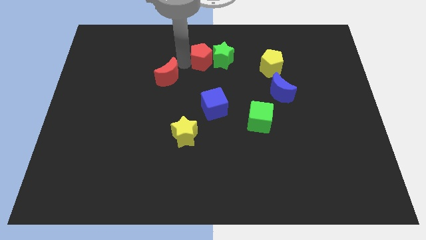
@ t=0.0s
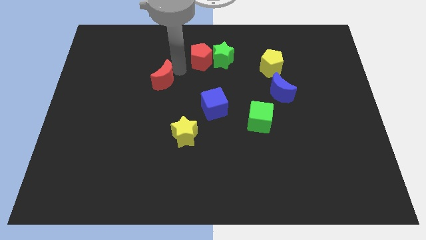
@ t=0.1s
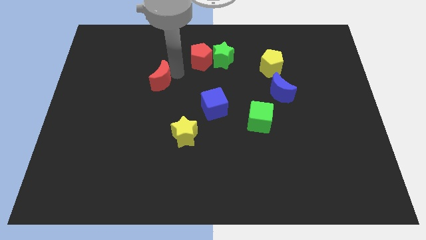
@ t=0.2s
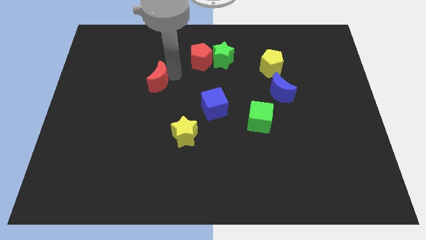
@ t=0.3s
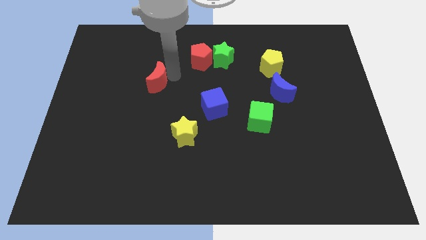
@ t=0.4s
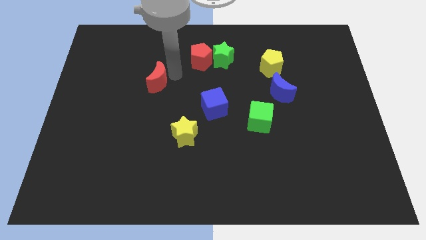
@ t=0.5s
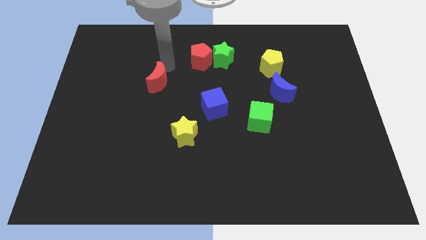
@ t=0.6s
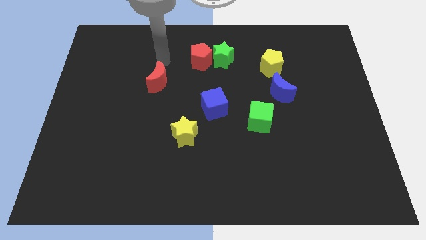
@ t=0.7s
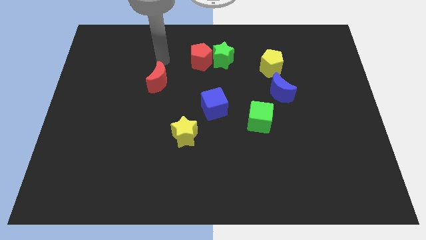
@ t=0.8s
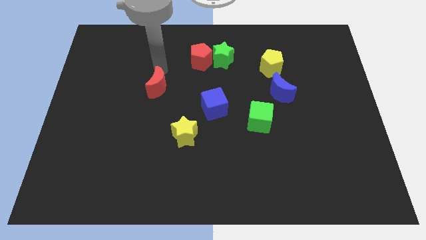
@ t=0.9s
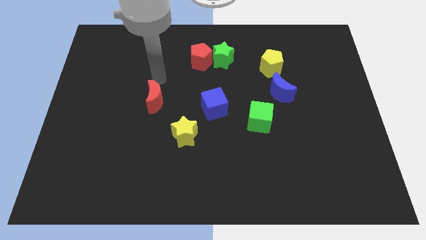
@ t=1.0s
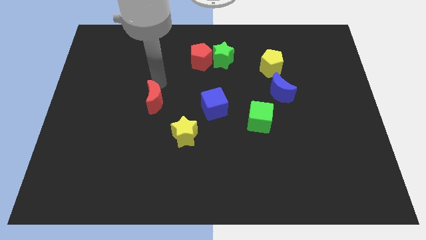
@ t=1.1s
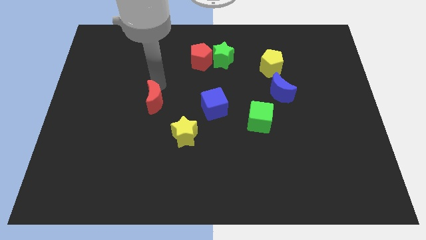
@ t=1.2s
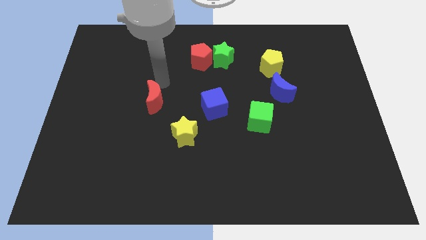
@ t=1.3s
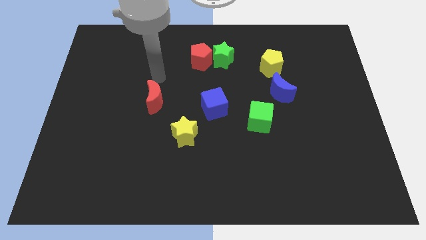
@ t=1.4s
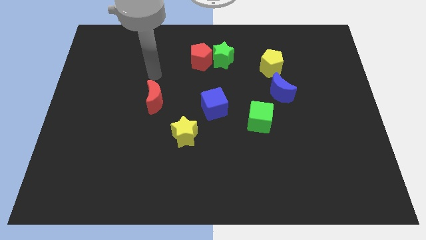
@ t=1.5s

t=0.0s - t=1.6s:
move the red moon towards the bottom side

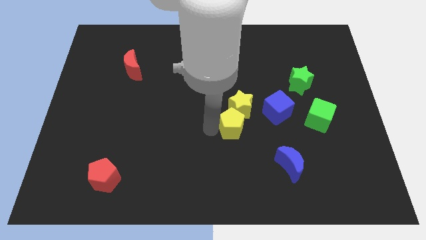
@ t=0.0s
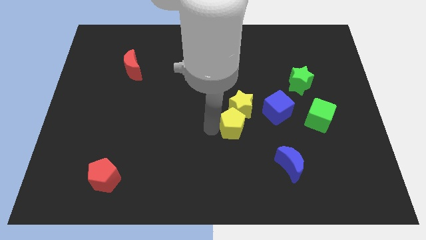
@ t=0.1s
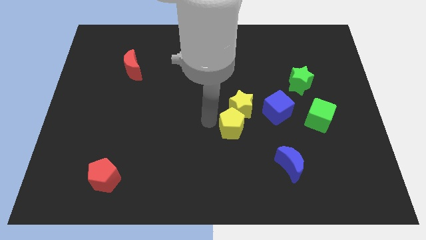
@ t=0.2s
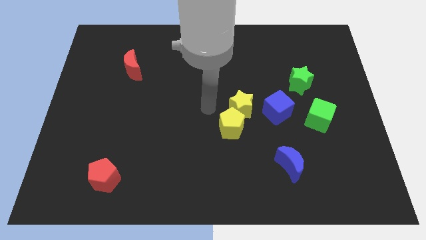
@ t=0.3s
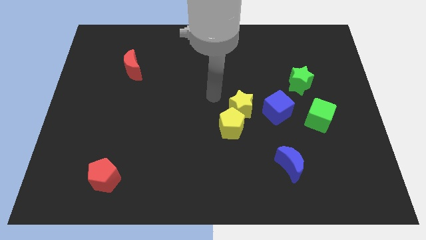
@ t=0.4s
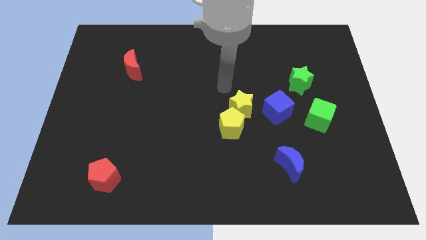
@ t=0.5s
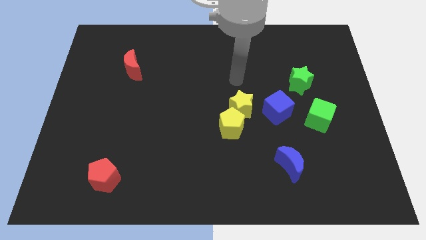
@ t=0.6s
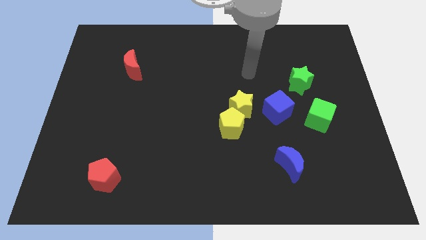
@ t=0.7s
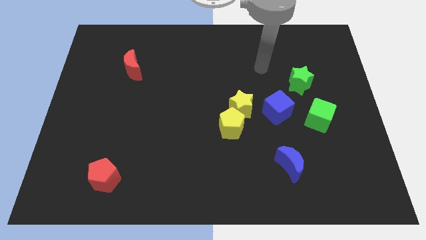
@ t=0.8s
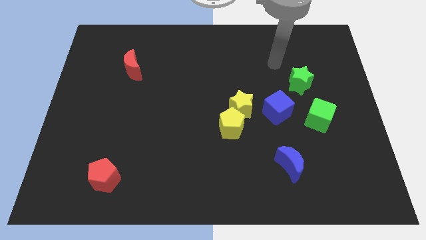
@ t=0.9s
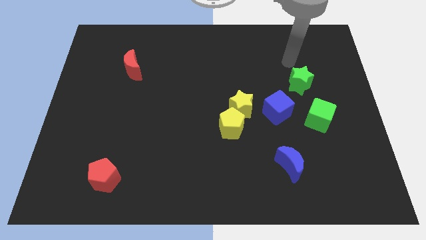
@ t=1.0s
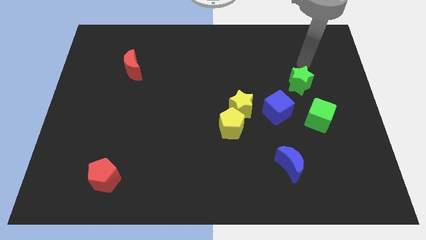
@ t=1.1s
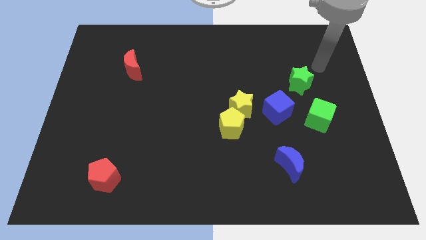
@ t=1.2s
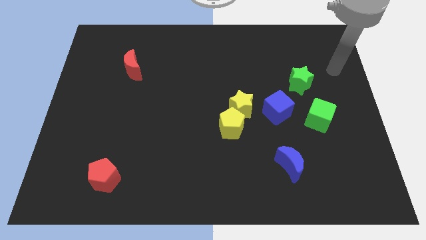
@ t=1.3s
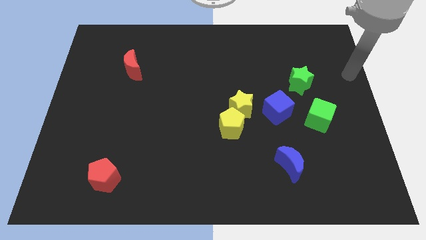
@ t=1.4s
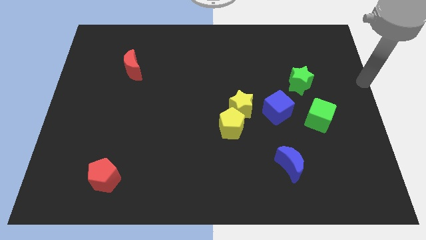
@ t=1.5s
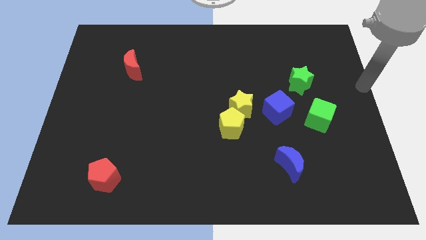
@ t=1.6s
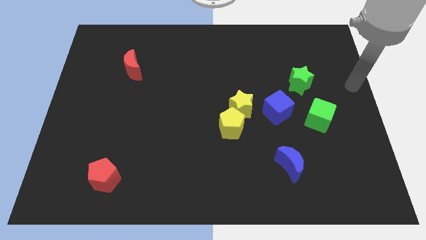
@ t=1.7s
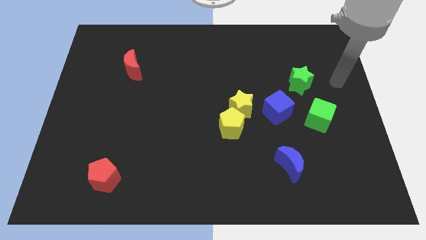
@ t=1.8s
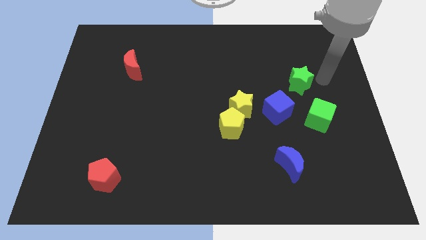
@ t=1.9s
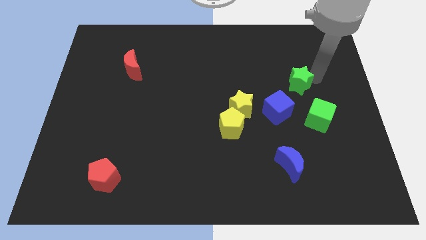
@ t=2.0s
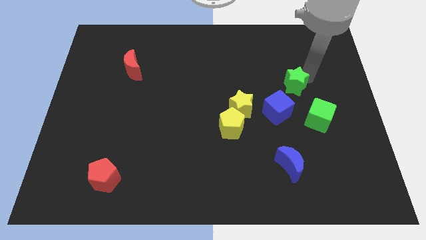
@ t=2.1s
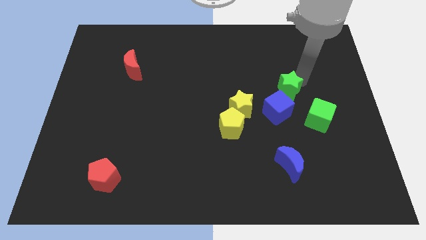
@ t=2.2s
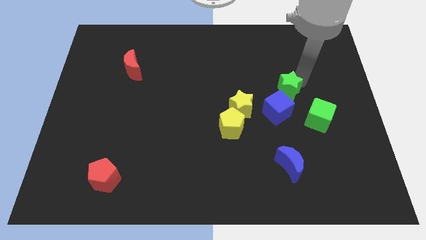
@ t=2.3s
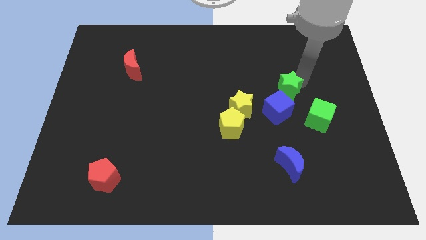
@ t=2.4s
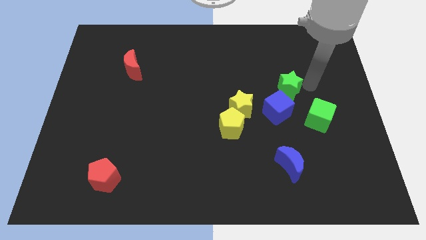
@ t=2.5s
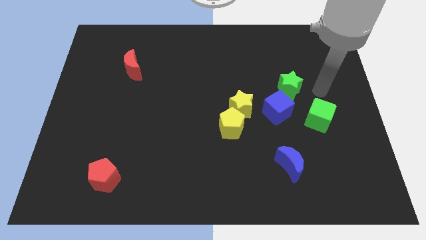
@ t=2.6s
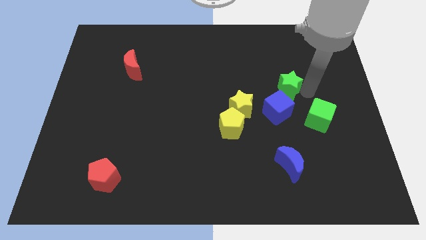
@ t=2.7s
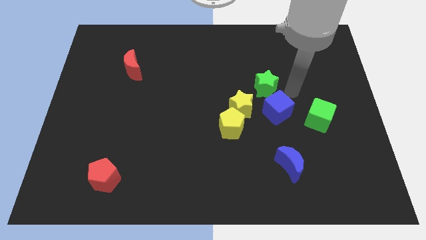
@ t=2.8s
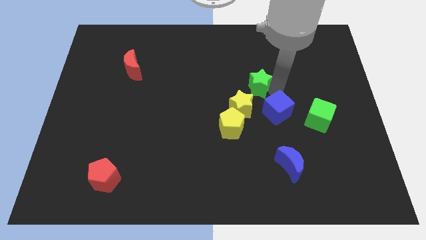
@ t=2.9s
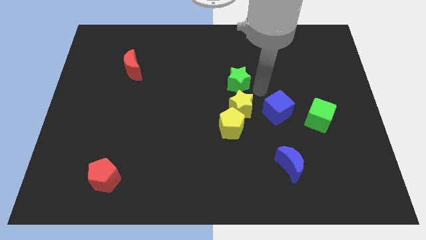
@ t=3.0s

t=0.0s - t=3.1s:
move the green star above the yellow star

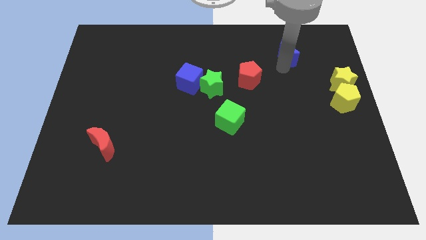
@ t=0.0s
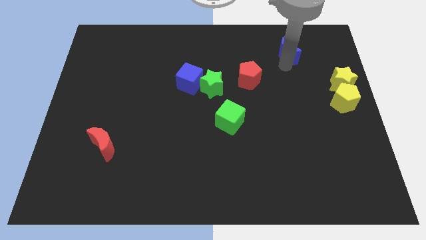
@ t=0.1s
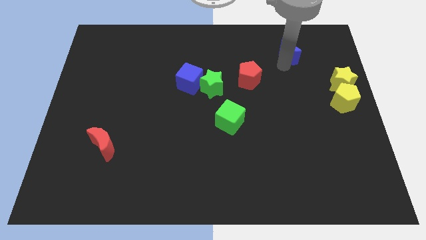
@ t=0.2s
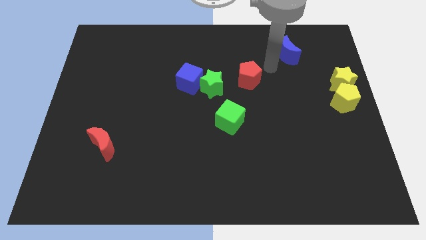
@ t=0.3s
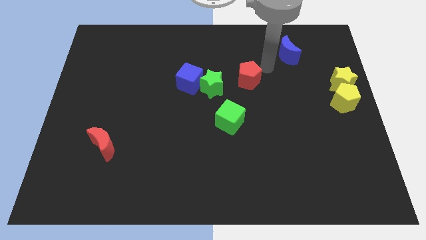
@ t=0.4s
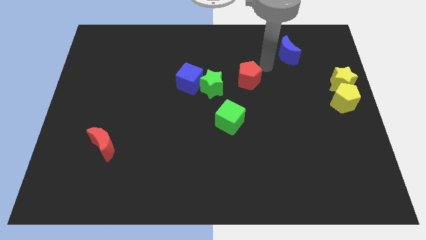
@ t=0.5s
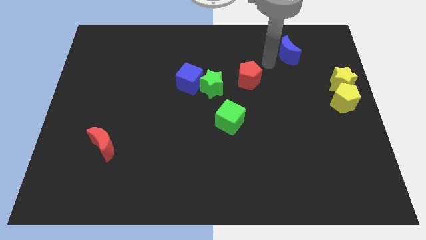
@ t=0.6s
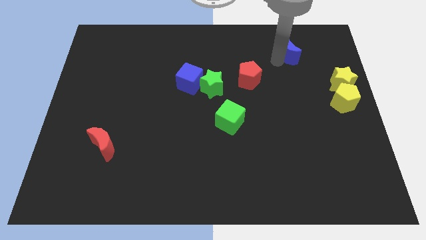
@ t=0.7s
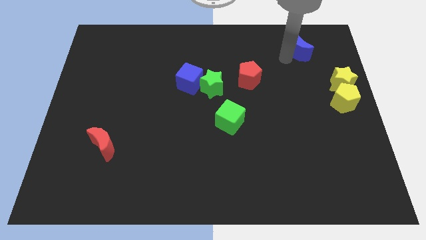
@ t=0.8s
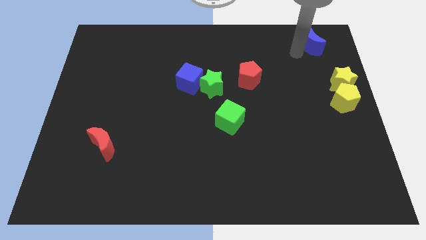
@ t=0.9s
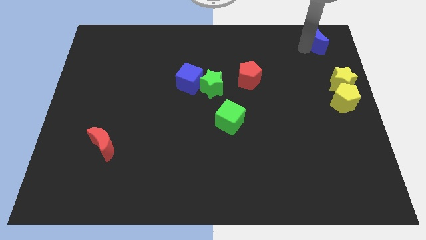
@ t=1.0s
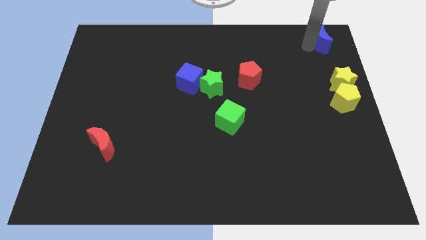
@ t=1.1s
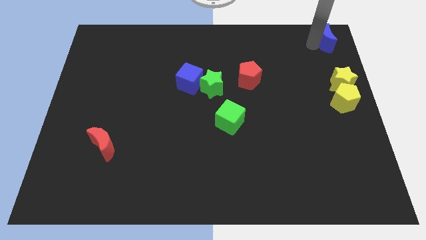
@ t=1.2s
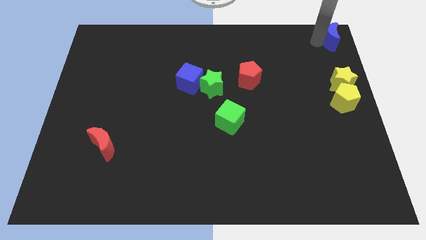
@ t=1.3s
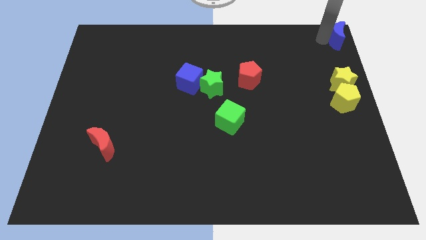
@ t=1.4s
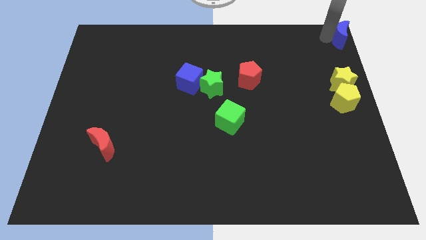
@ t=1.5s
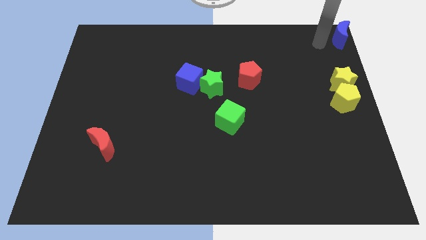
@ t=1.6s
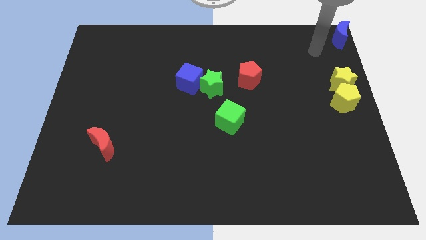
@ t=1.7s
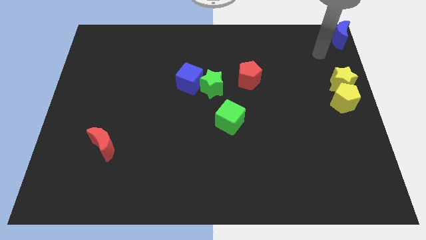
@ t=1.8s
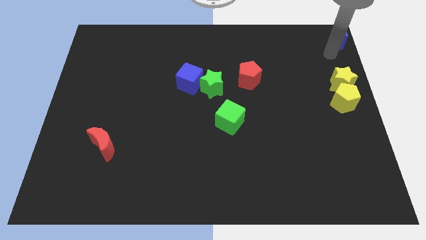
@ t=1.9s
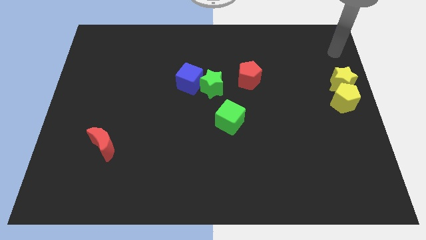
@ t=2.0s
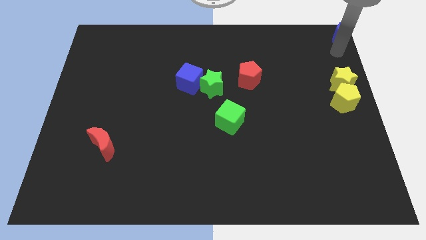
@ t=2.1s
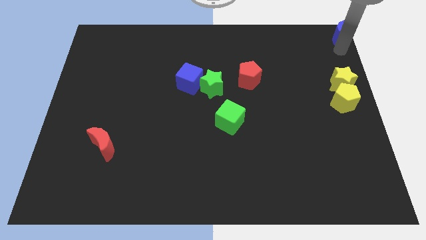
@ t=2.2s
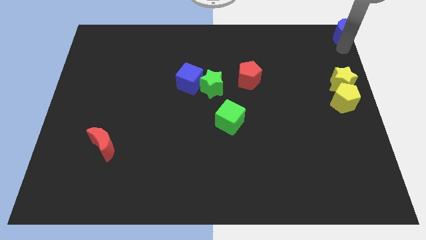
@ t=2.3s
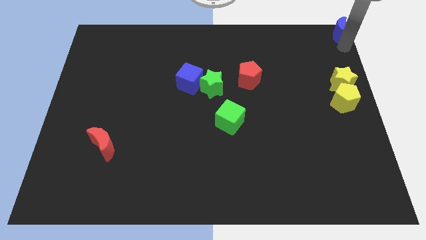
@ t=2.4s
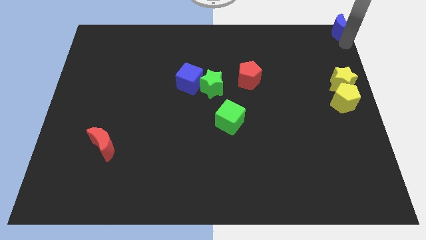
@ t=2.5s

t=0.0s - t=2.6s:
place blue crescent towards top right corner

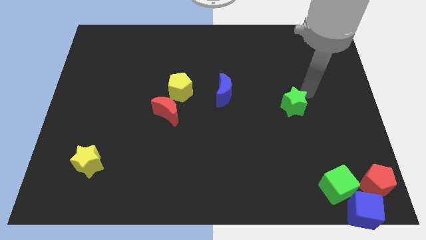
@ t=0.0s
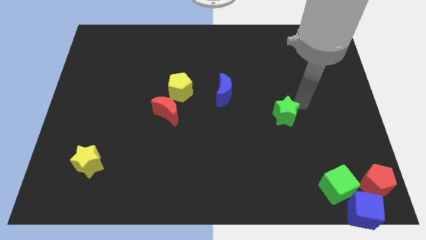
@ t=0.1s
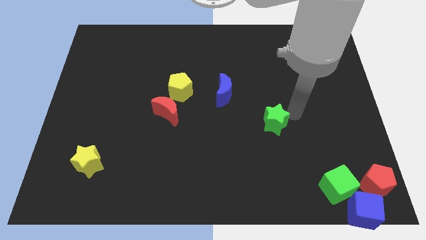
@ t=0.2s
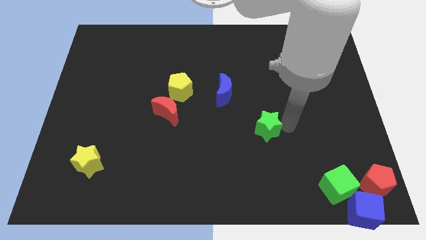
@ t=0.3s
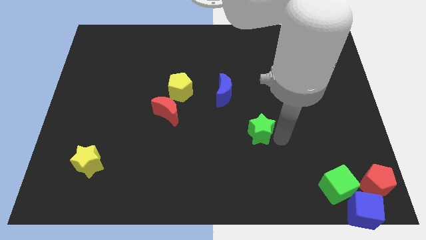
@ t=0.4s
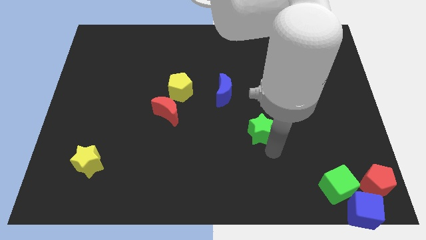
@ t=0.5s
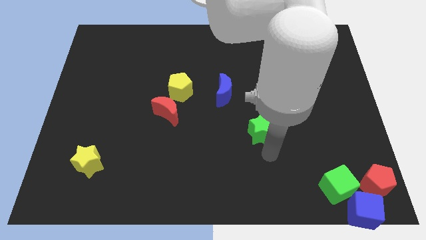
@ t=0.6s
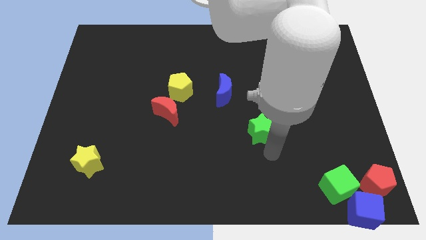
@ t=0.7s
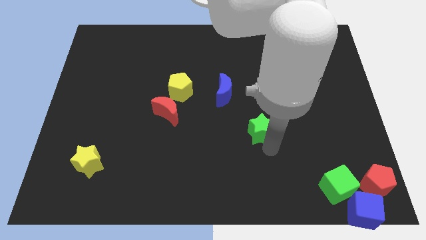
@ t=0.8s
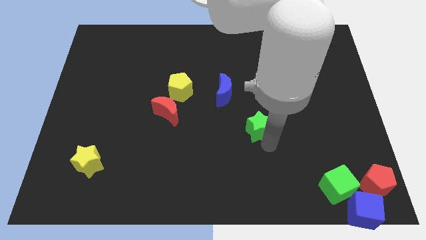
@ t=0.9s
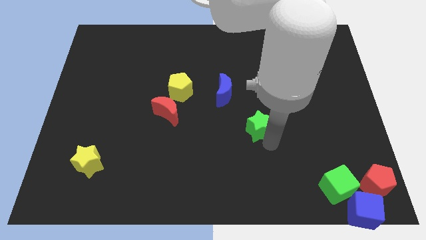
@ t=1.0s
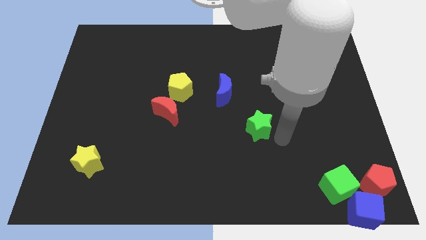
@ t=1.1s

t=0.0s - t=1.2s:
push the green star towards the bottom center

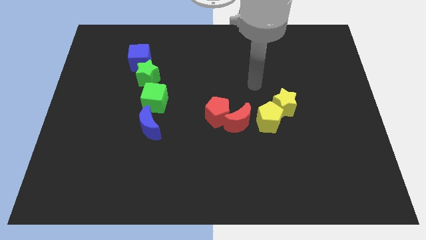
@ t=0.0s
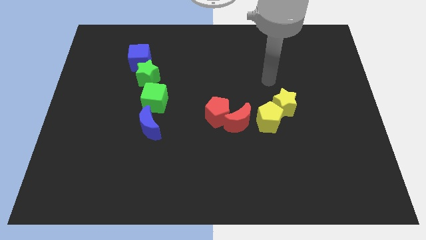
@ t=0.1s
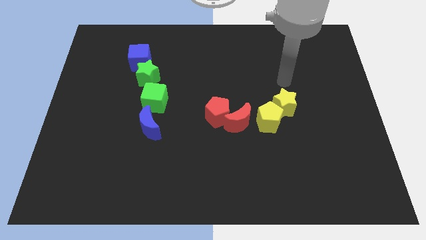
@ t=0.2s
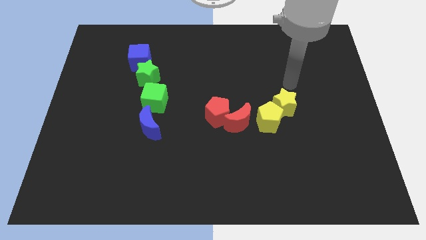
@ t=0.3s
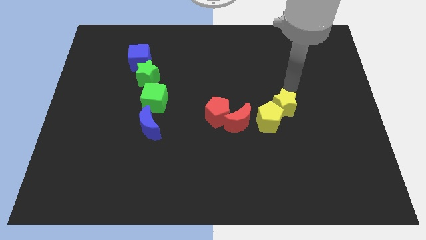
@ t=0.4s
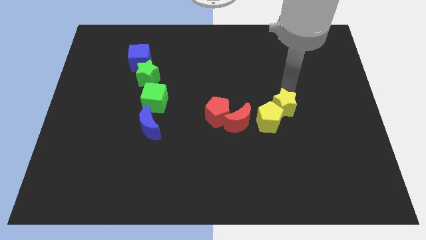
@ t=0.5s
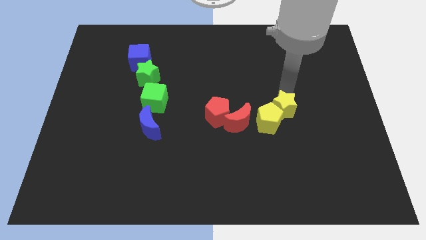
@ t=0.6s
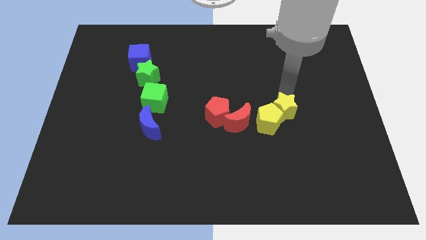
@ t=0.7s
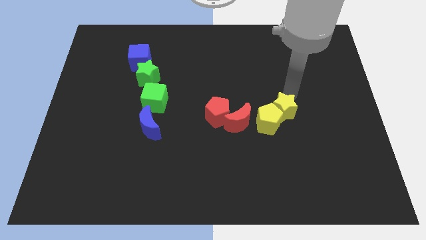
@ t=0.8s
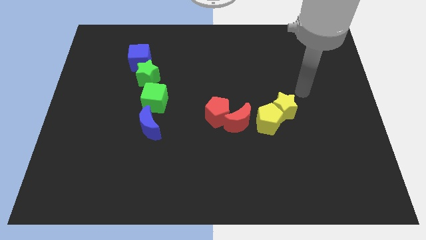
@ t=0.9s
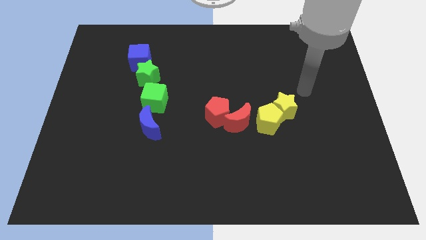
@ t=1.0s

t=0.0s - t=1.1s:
push the yellow star into the yellow pentagon
